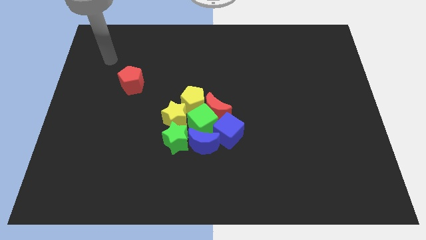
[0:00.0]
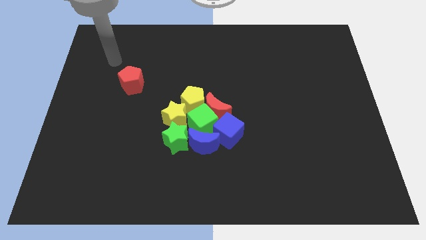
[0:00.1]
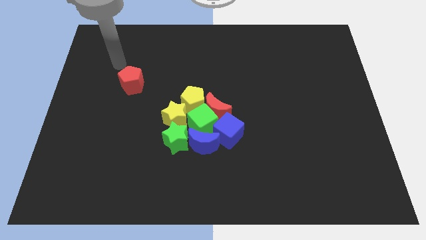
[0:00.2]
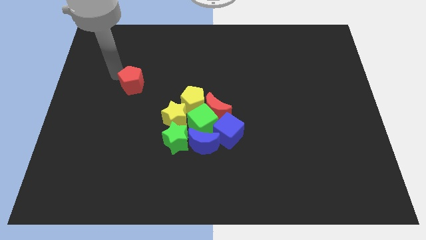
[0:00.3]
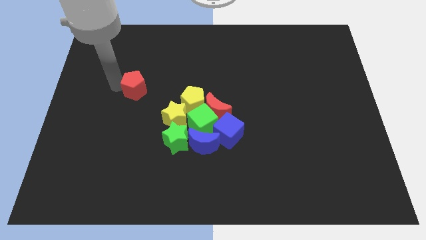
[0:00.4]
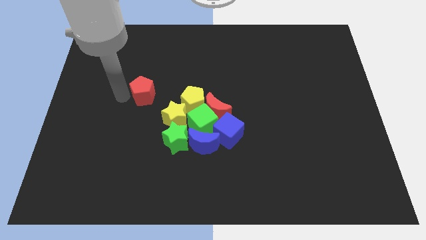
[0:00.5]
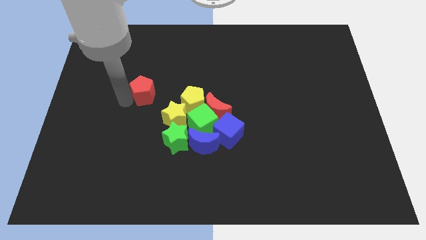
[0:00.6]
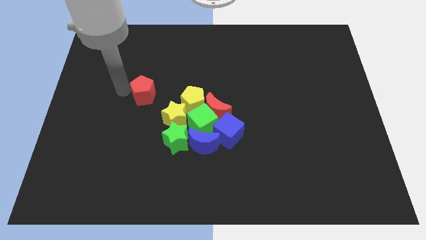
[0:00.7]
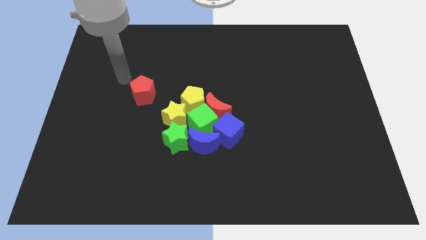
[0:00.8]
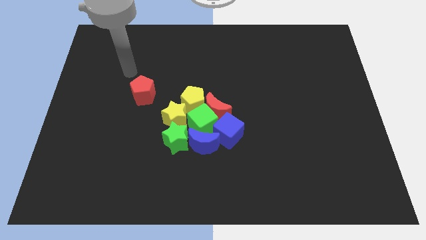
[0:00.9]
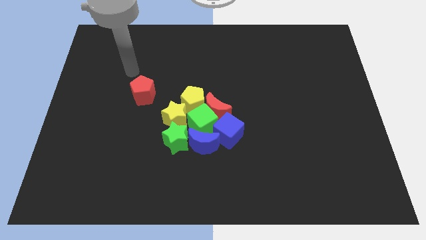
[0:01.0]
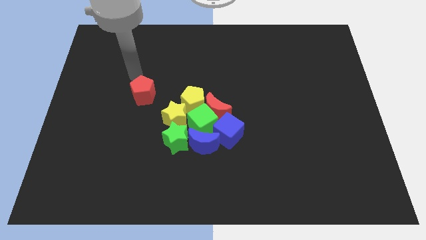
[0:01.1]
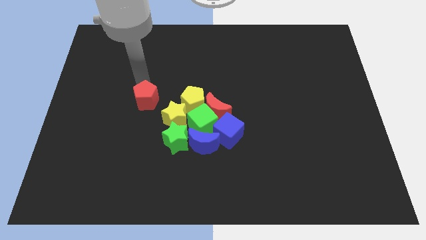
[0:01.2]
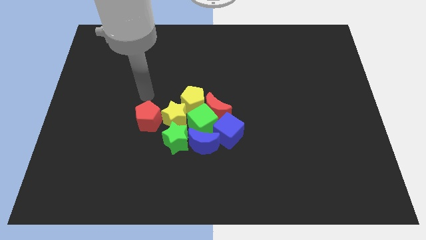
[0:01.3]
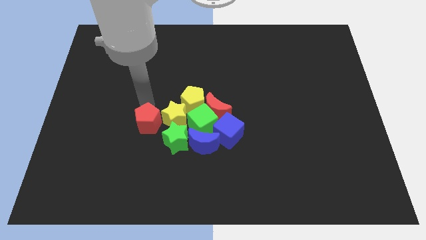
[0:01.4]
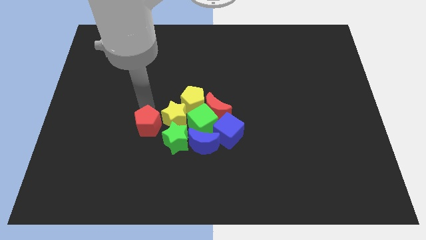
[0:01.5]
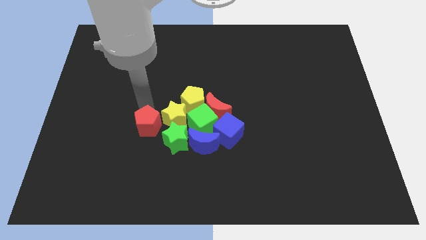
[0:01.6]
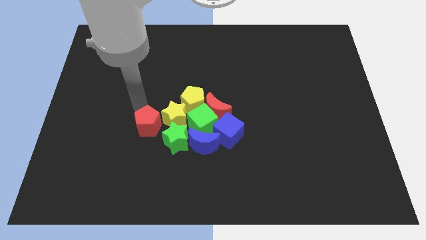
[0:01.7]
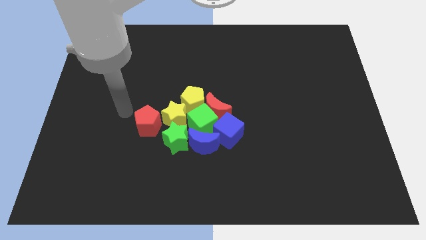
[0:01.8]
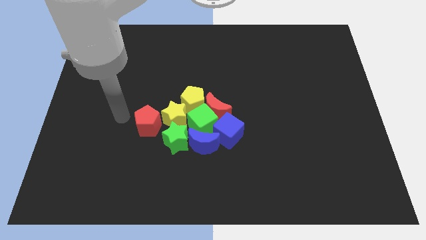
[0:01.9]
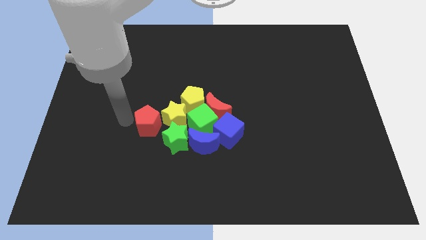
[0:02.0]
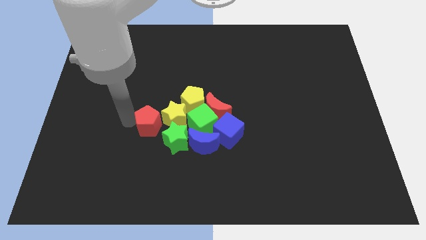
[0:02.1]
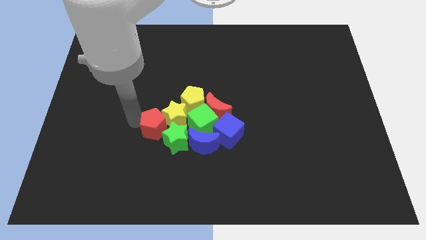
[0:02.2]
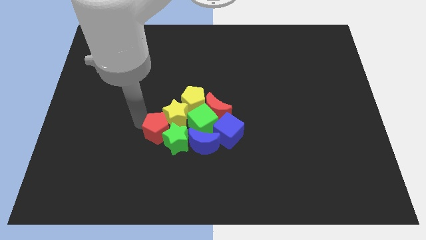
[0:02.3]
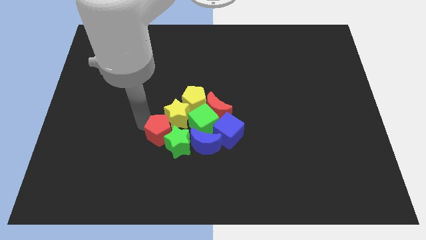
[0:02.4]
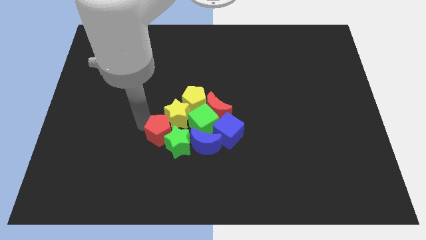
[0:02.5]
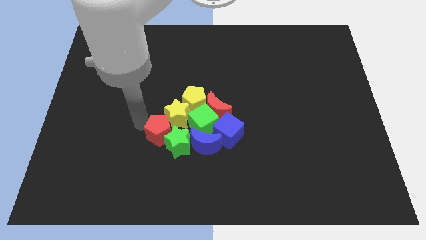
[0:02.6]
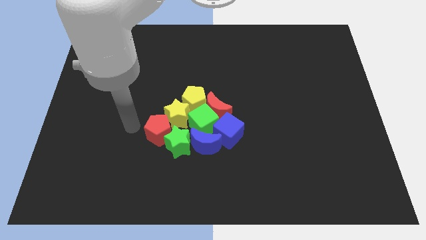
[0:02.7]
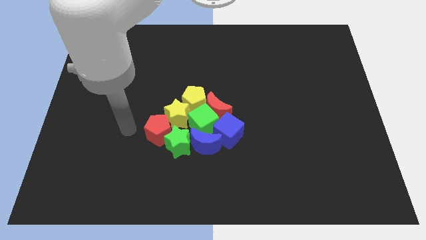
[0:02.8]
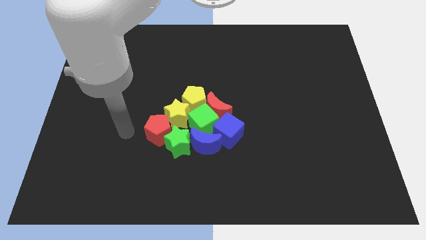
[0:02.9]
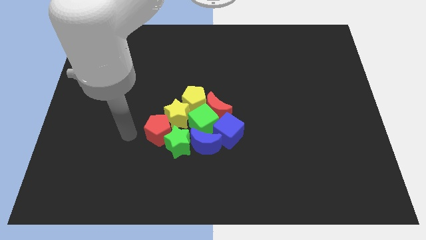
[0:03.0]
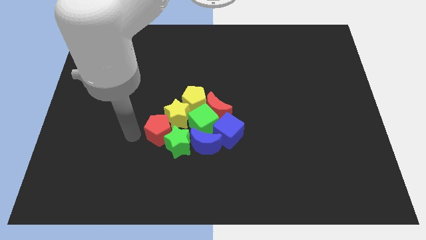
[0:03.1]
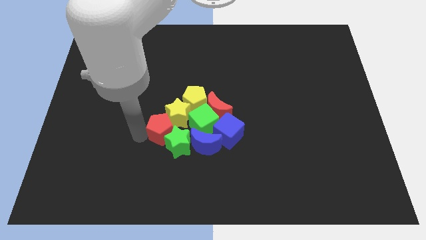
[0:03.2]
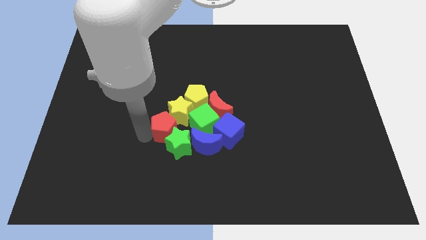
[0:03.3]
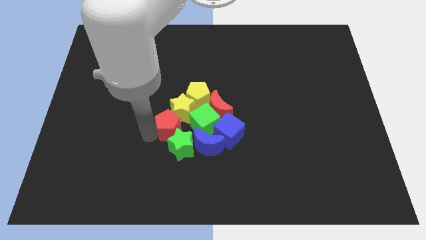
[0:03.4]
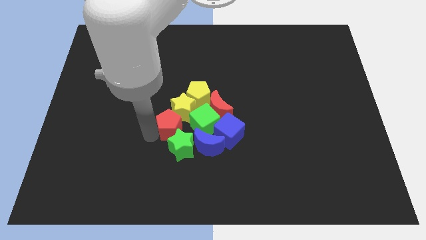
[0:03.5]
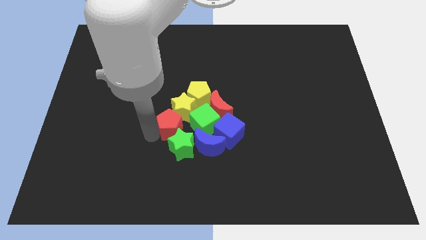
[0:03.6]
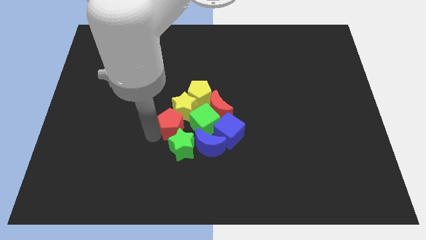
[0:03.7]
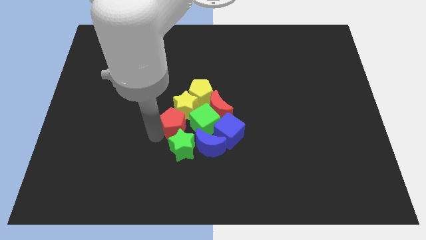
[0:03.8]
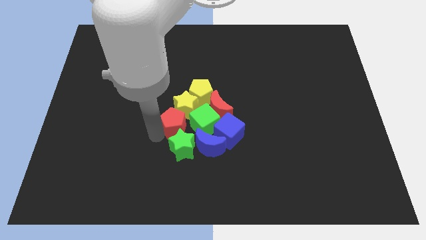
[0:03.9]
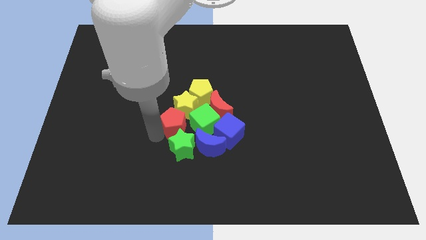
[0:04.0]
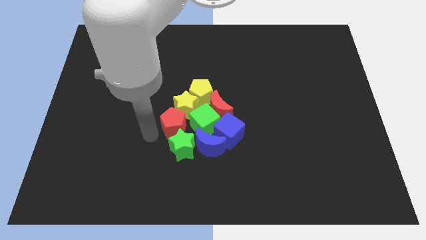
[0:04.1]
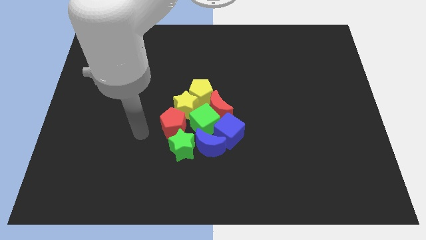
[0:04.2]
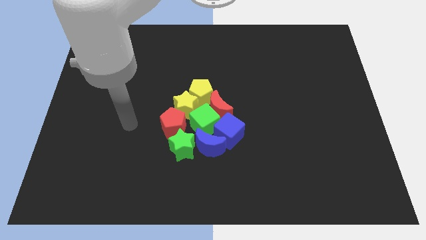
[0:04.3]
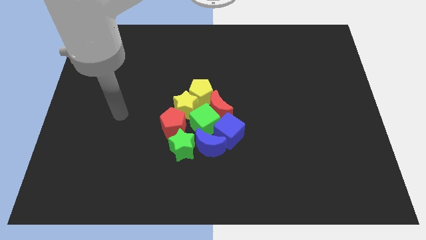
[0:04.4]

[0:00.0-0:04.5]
move the red pentagon between green star and yellow star

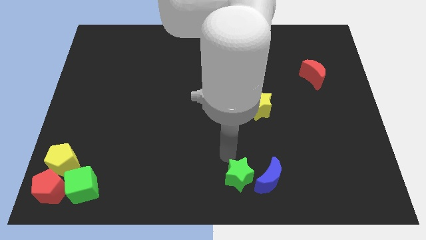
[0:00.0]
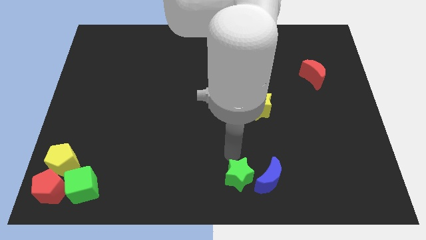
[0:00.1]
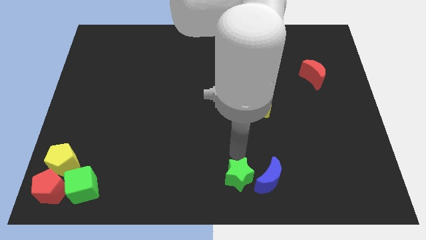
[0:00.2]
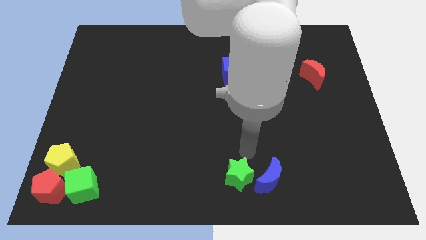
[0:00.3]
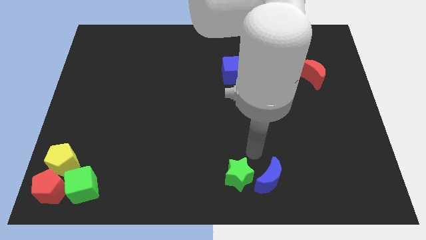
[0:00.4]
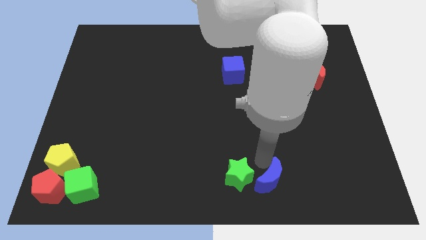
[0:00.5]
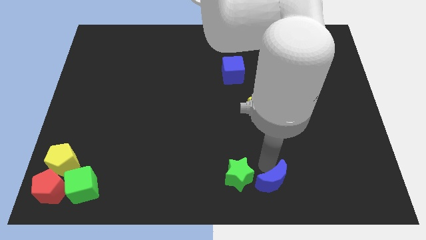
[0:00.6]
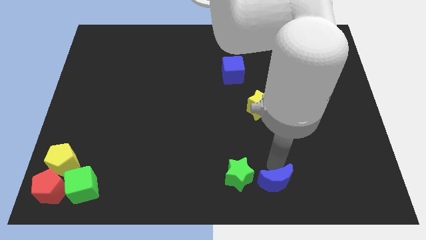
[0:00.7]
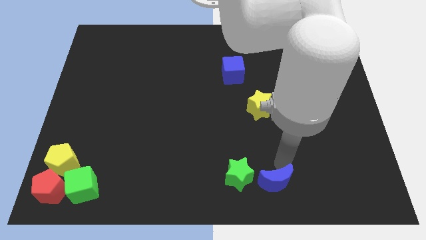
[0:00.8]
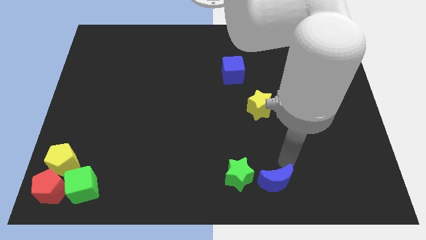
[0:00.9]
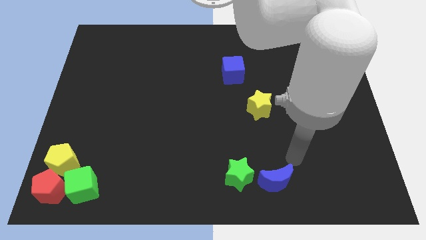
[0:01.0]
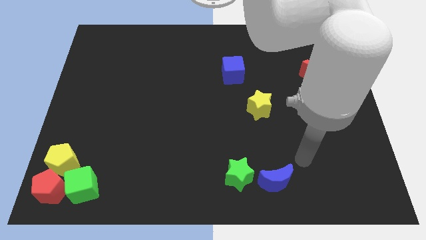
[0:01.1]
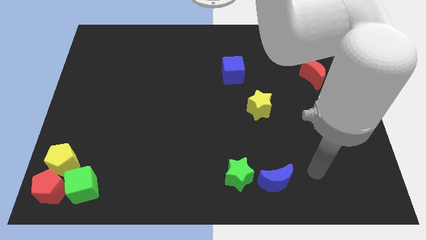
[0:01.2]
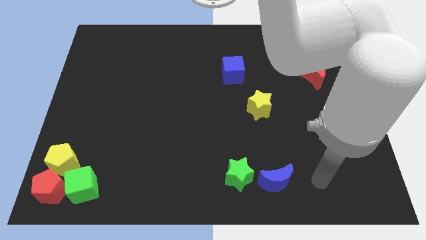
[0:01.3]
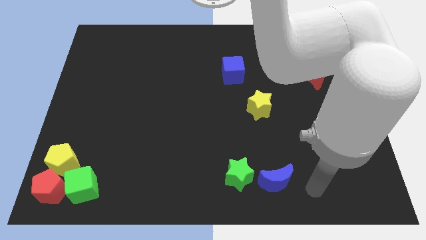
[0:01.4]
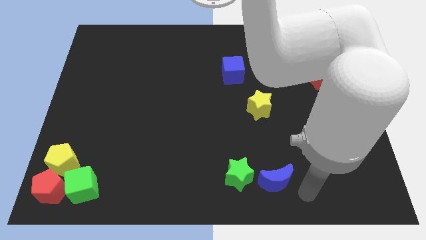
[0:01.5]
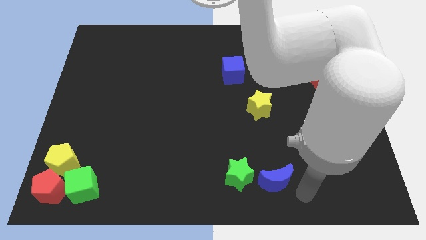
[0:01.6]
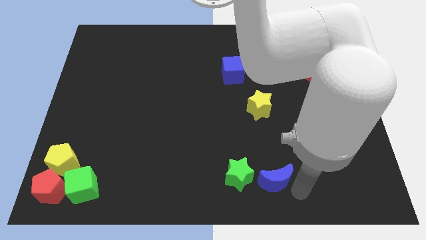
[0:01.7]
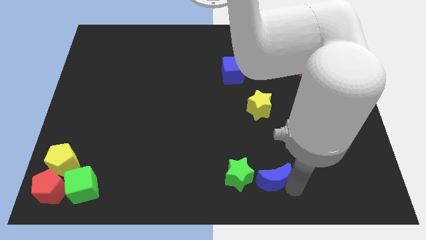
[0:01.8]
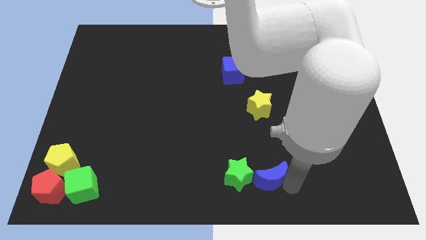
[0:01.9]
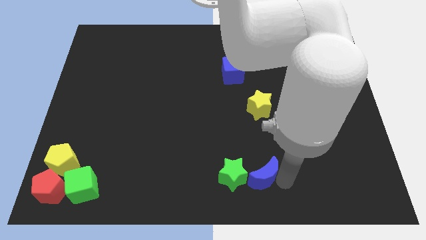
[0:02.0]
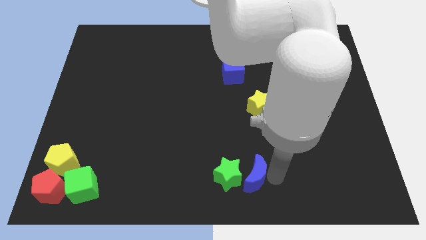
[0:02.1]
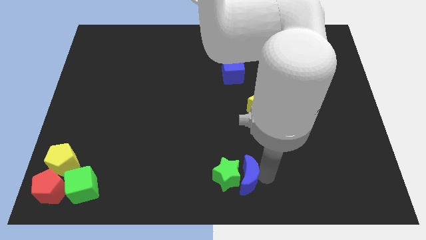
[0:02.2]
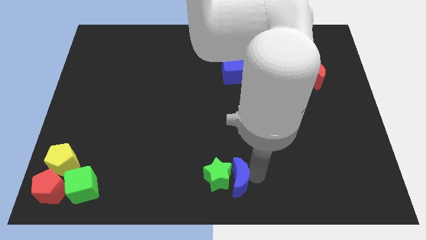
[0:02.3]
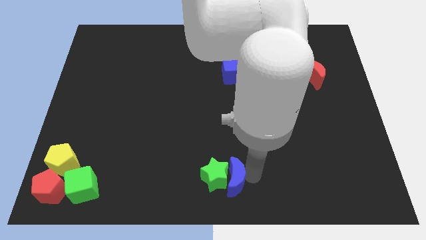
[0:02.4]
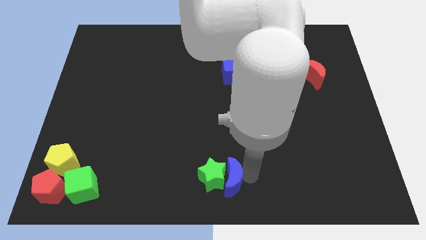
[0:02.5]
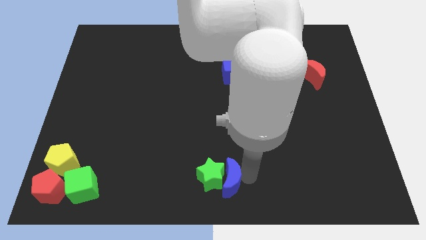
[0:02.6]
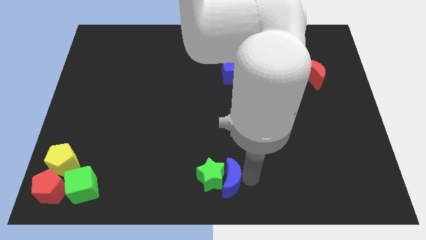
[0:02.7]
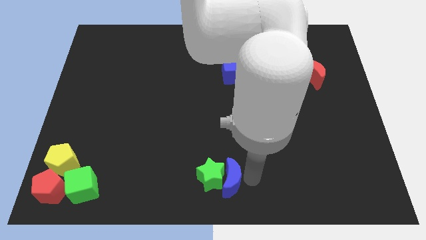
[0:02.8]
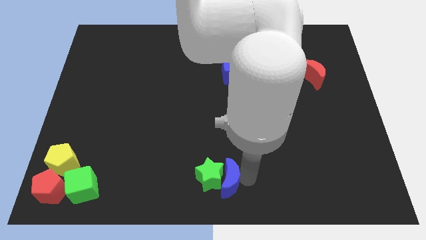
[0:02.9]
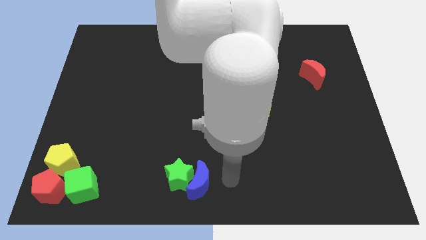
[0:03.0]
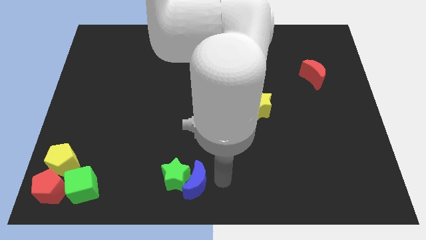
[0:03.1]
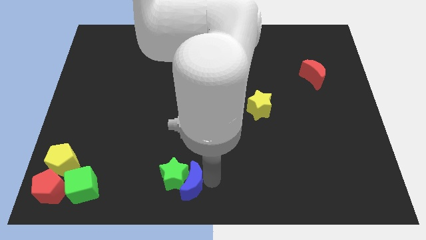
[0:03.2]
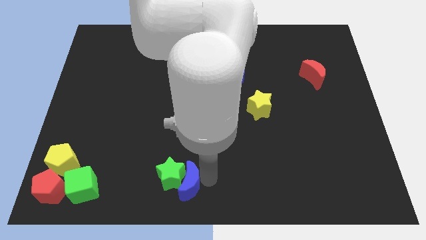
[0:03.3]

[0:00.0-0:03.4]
push green star and blue cube to the left

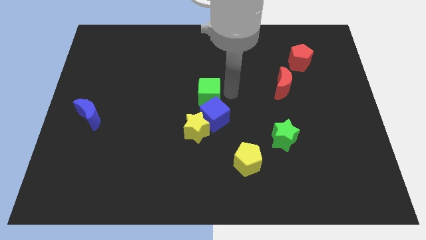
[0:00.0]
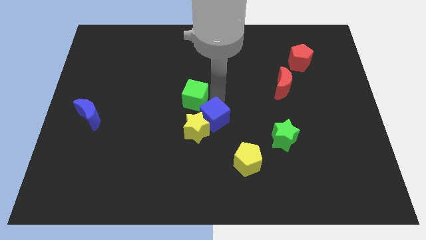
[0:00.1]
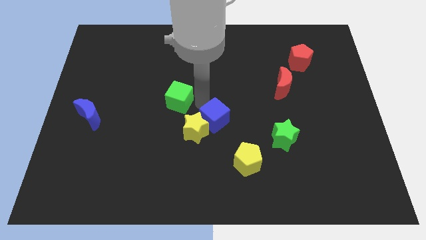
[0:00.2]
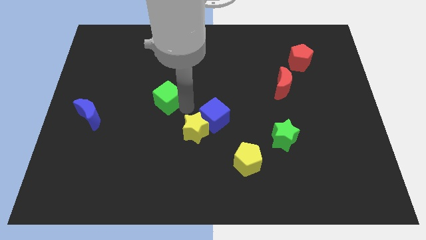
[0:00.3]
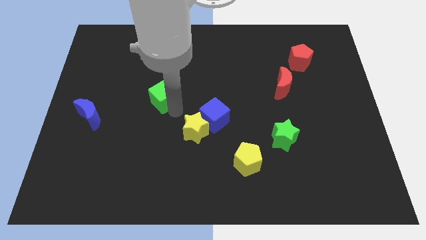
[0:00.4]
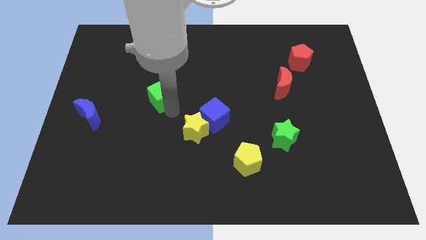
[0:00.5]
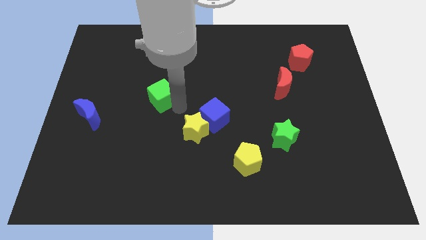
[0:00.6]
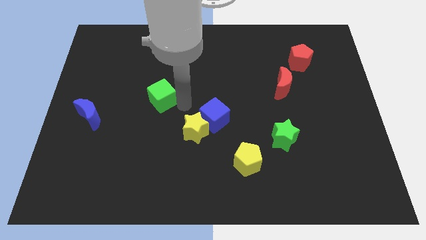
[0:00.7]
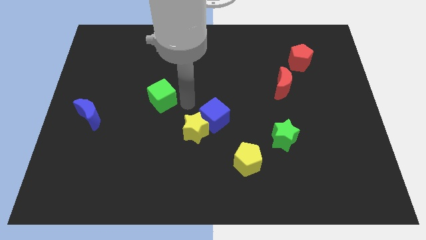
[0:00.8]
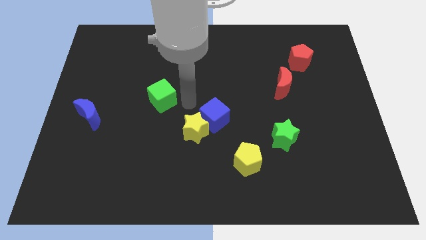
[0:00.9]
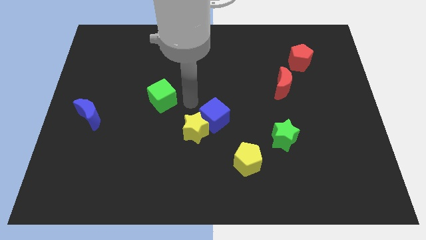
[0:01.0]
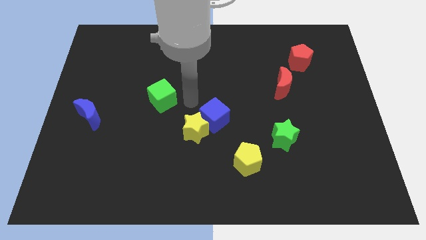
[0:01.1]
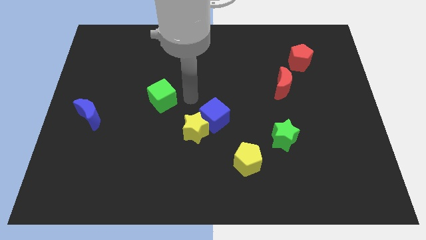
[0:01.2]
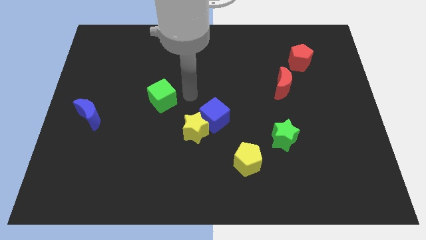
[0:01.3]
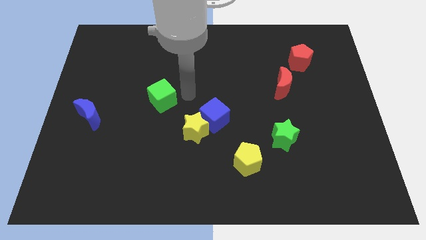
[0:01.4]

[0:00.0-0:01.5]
move the green cube away from the blue cube
